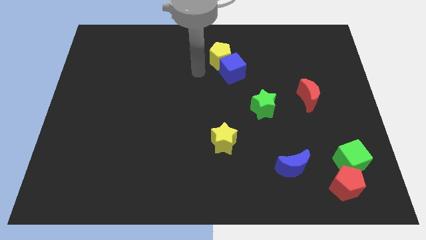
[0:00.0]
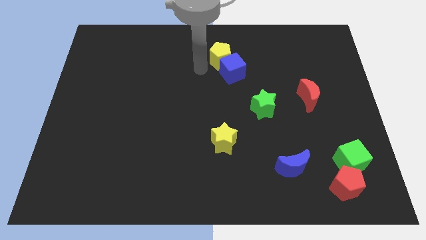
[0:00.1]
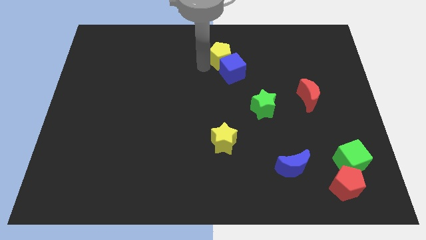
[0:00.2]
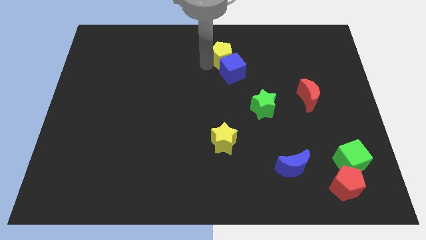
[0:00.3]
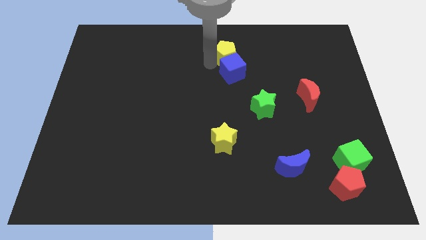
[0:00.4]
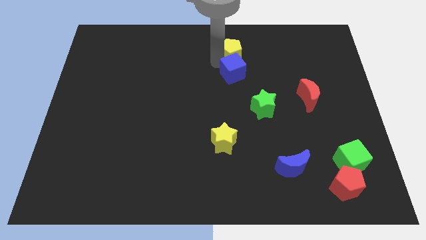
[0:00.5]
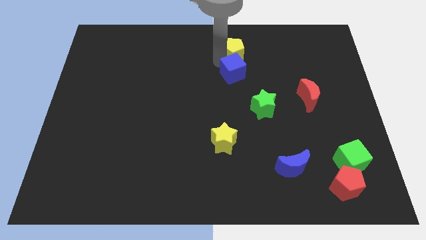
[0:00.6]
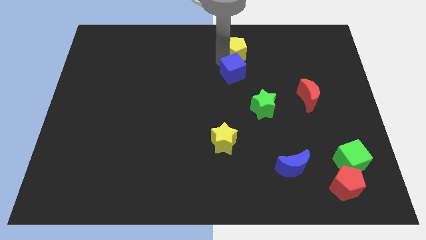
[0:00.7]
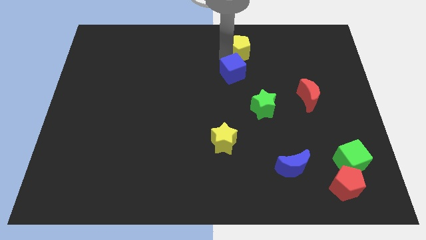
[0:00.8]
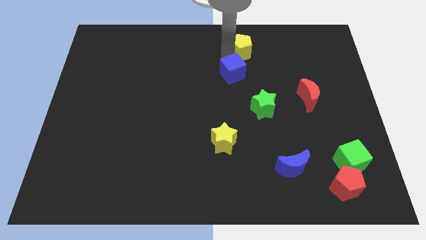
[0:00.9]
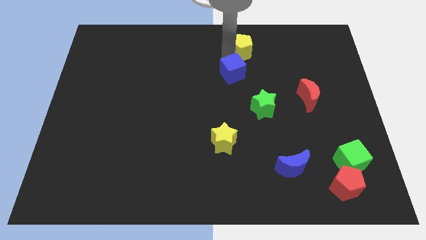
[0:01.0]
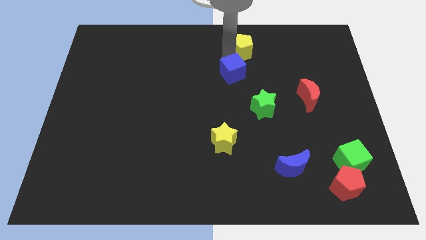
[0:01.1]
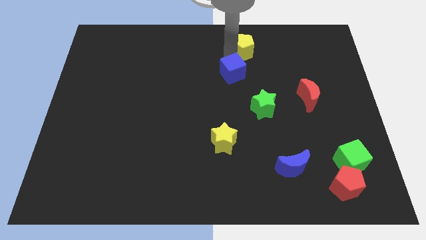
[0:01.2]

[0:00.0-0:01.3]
push the yellow pentagon slightly to the right

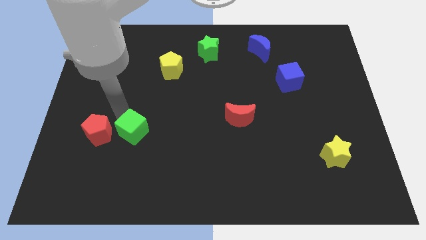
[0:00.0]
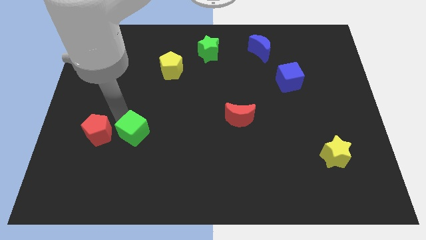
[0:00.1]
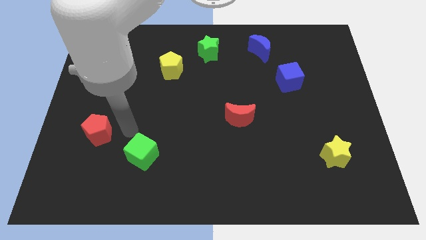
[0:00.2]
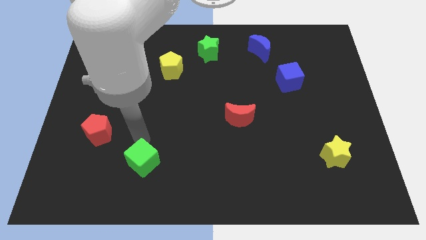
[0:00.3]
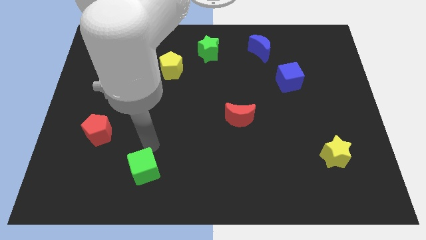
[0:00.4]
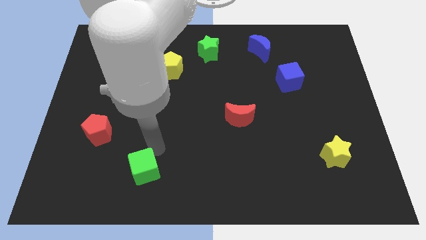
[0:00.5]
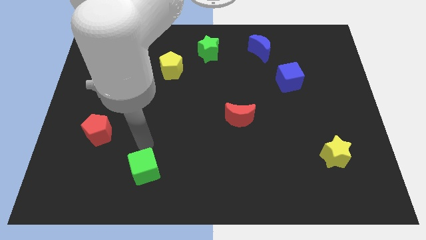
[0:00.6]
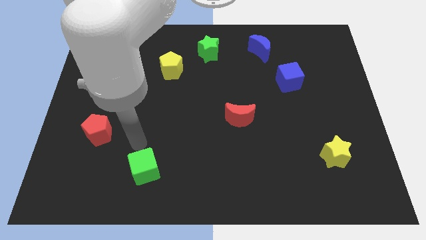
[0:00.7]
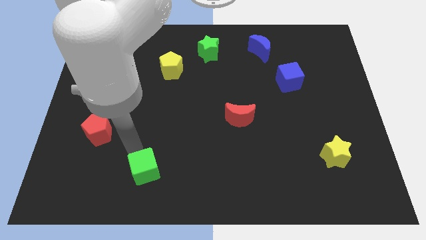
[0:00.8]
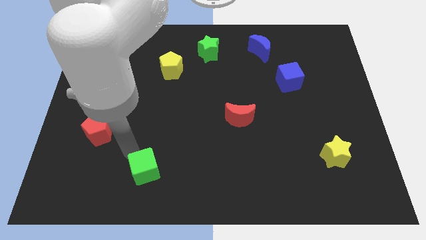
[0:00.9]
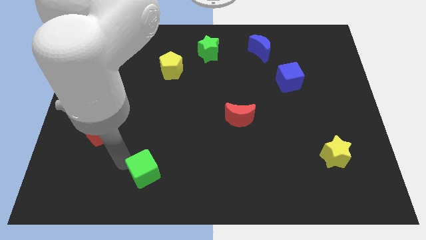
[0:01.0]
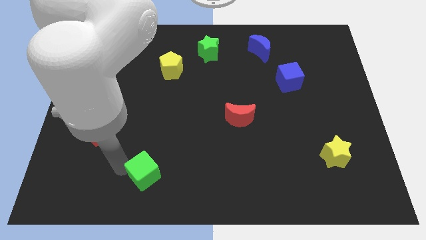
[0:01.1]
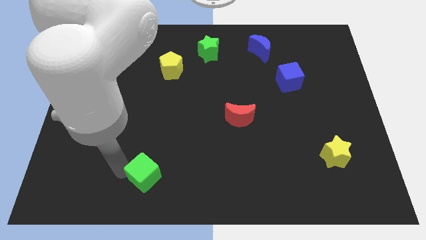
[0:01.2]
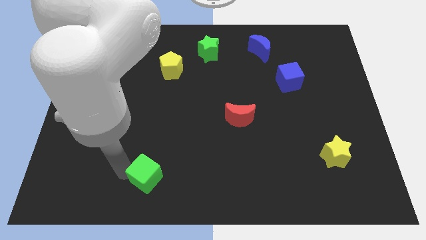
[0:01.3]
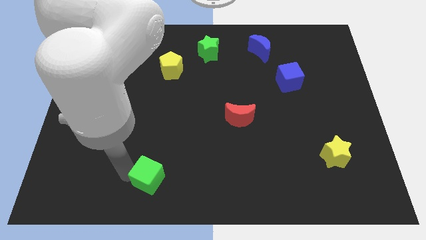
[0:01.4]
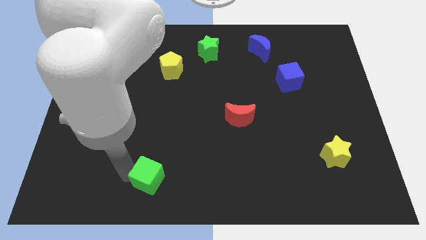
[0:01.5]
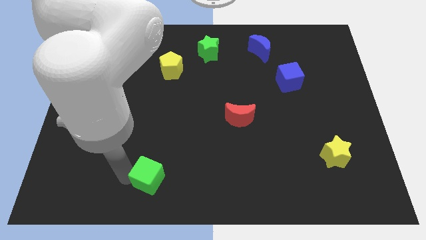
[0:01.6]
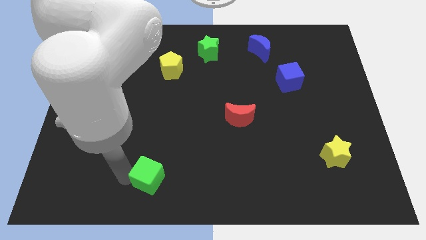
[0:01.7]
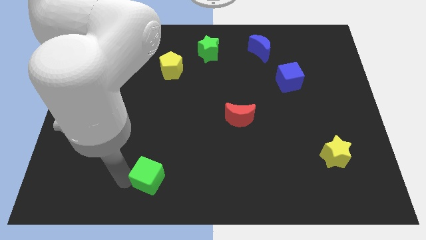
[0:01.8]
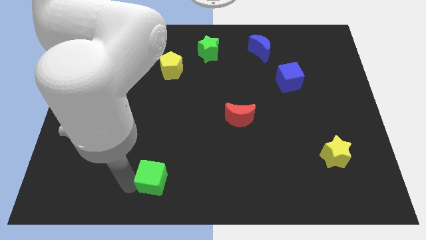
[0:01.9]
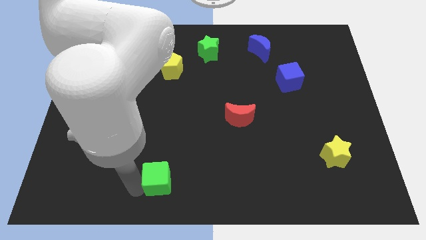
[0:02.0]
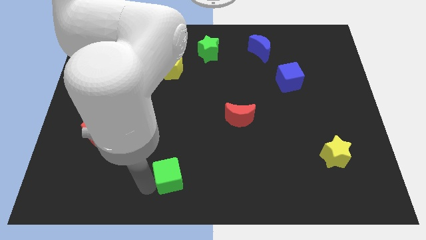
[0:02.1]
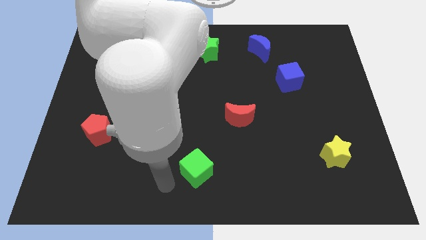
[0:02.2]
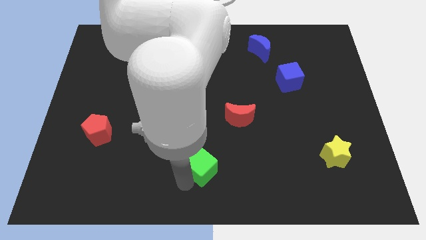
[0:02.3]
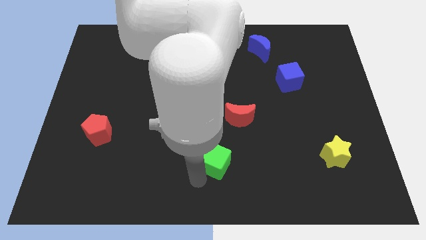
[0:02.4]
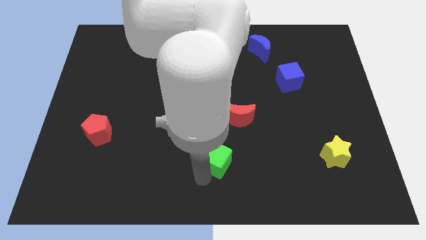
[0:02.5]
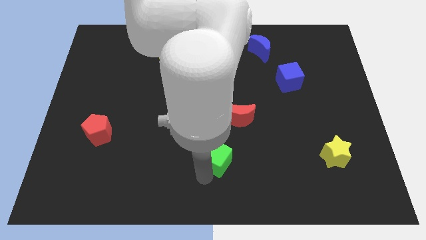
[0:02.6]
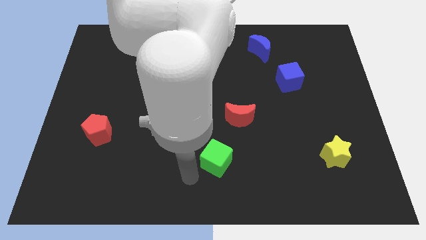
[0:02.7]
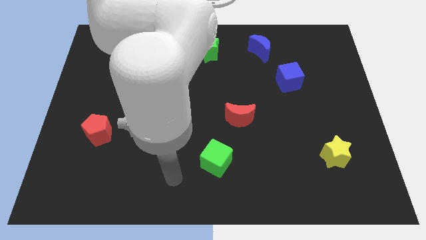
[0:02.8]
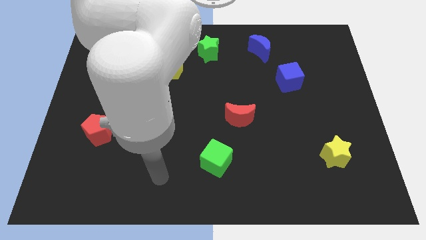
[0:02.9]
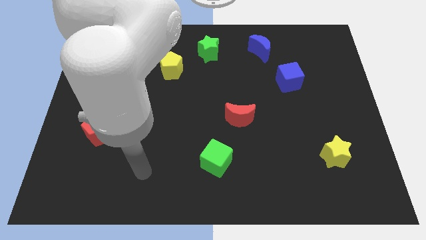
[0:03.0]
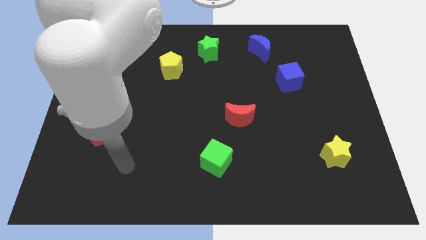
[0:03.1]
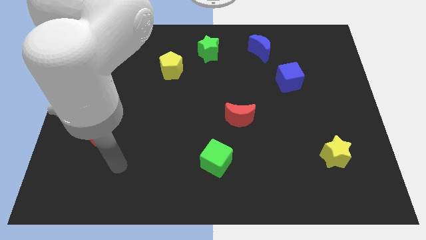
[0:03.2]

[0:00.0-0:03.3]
move the green cube away from the red pentagon

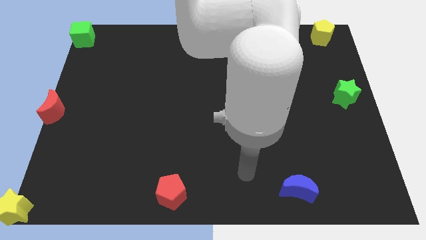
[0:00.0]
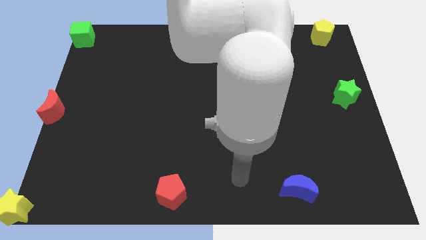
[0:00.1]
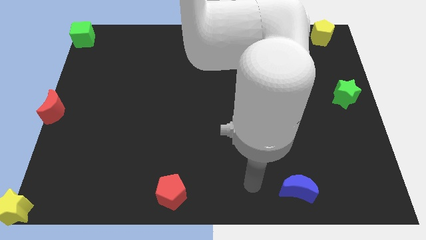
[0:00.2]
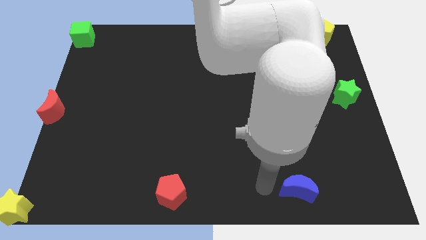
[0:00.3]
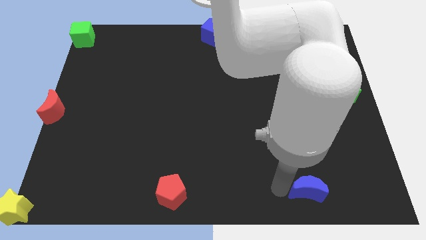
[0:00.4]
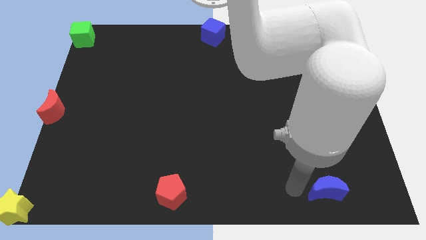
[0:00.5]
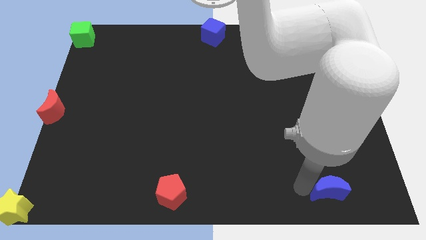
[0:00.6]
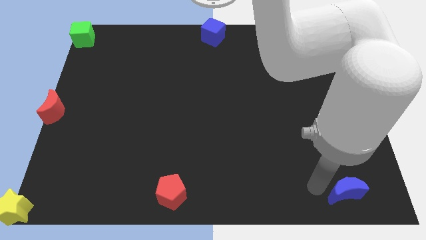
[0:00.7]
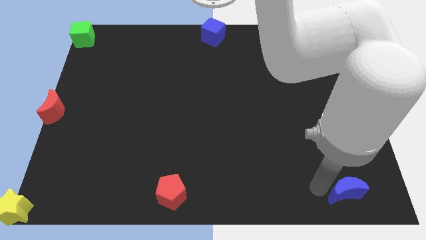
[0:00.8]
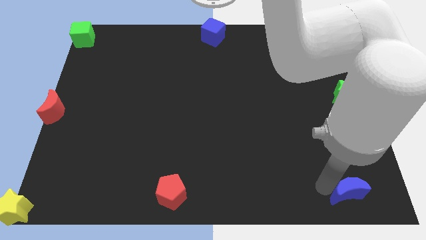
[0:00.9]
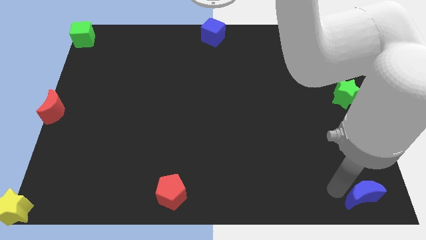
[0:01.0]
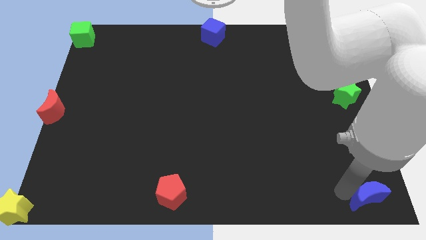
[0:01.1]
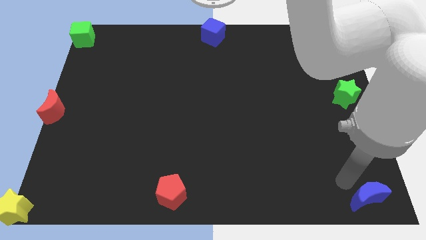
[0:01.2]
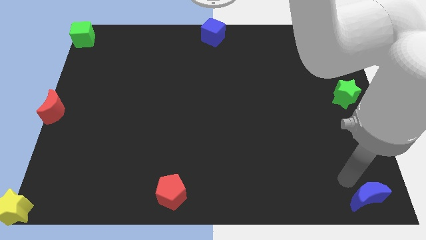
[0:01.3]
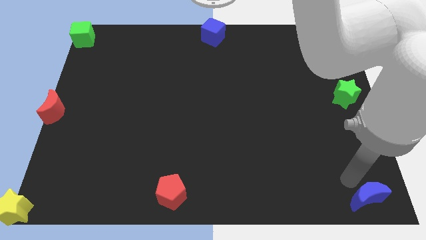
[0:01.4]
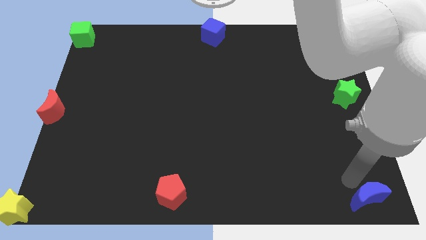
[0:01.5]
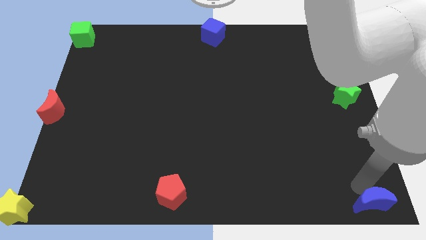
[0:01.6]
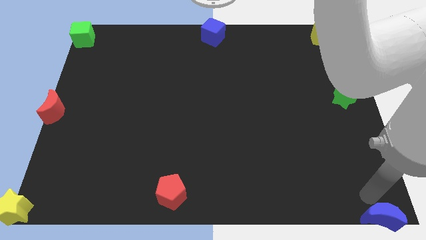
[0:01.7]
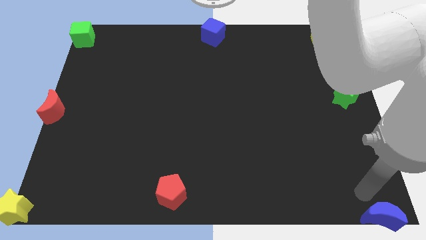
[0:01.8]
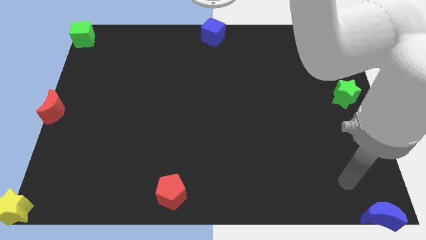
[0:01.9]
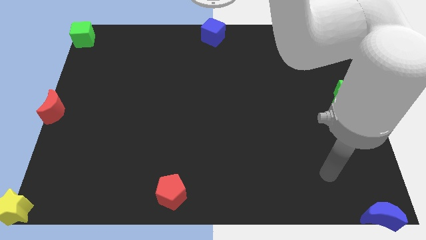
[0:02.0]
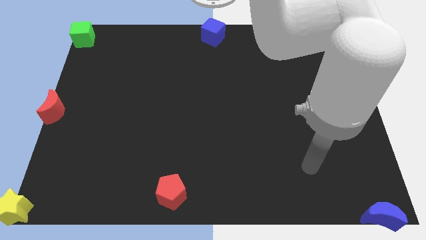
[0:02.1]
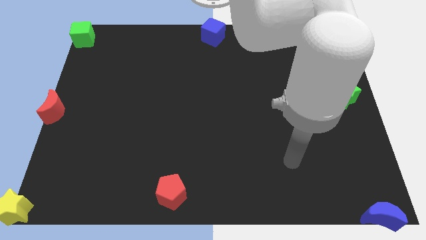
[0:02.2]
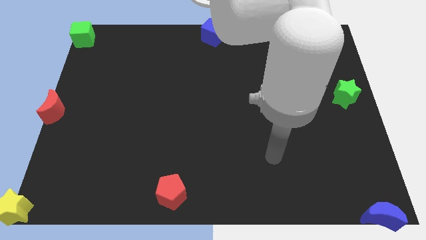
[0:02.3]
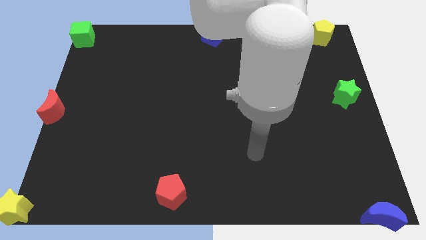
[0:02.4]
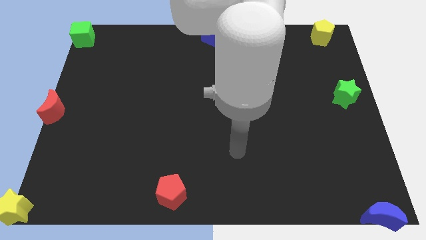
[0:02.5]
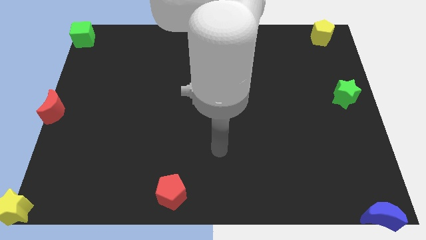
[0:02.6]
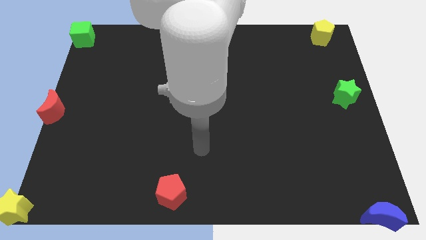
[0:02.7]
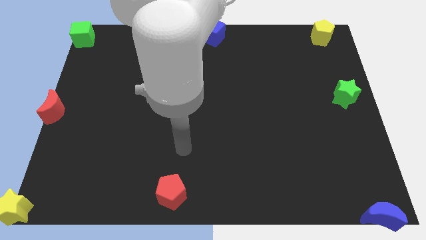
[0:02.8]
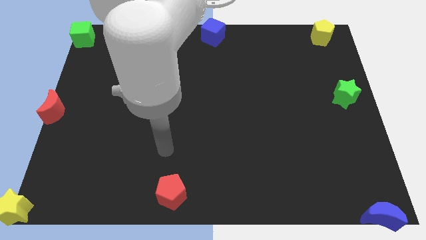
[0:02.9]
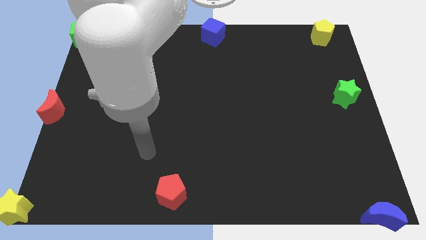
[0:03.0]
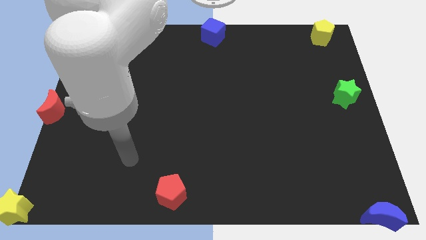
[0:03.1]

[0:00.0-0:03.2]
put the blue crescent at the bottom right corner

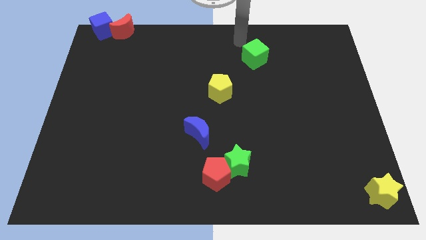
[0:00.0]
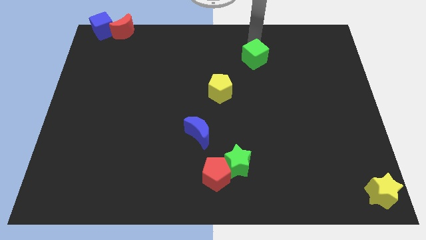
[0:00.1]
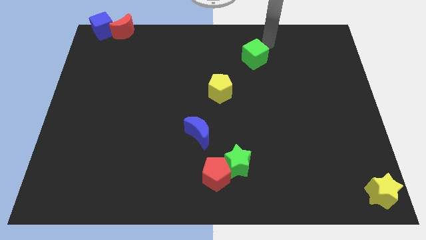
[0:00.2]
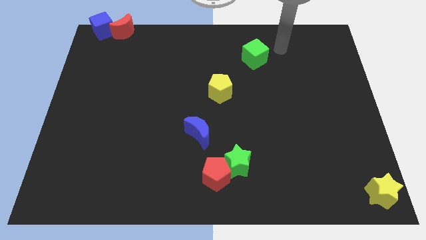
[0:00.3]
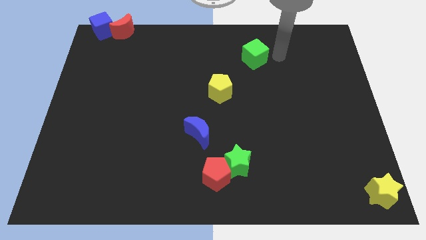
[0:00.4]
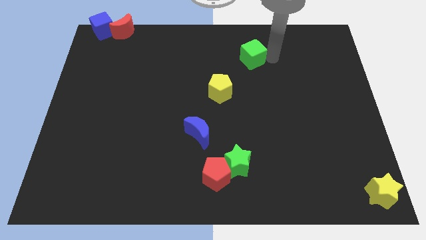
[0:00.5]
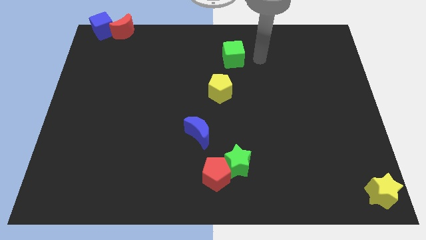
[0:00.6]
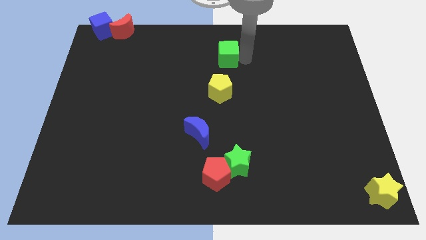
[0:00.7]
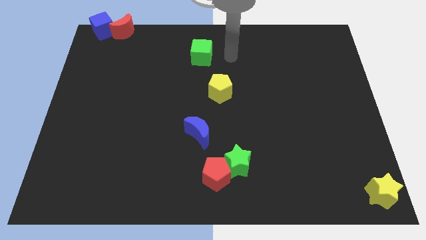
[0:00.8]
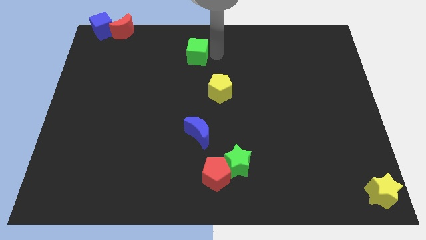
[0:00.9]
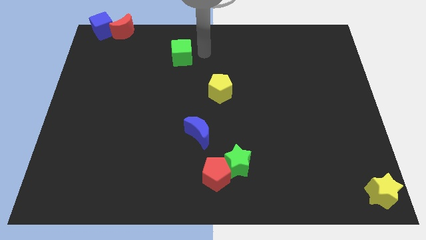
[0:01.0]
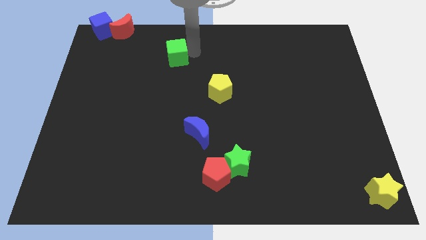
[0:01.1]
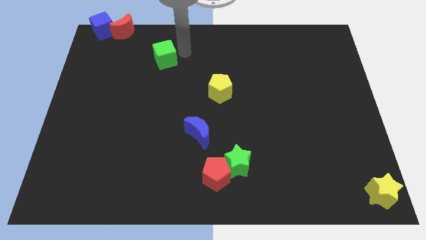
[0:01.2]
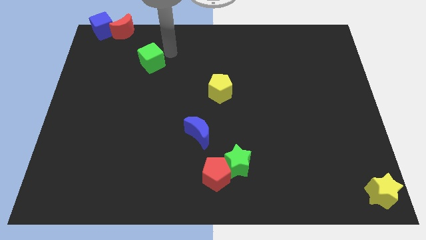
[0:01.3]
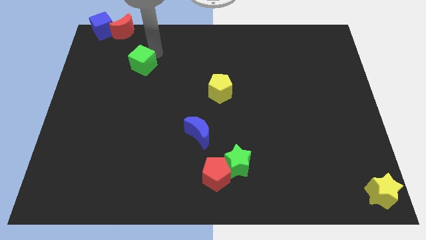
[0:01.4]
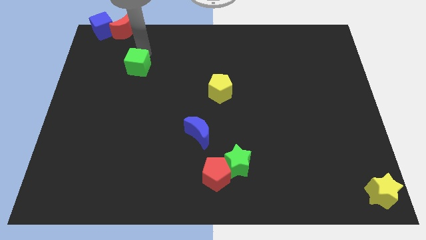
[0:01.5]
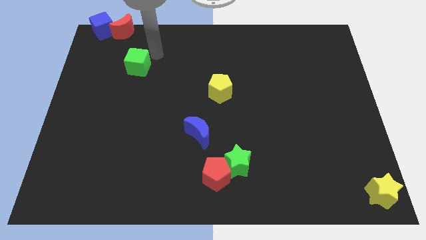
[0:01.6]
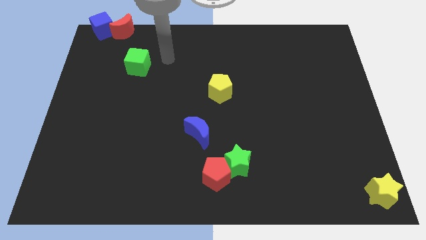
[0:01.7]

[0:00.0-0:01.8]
move the green cube diagonally to the red moon
